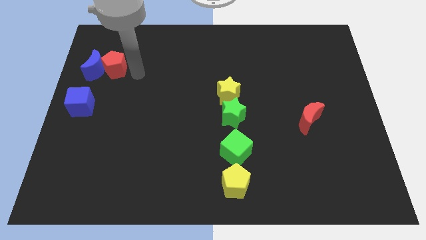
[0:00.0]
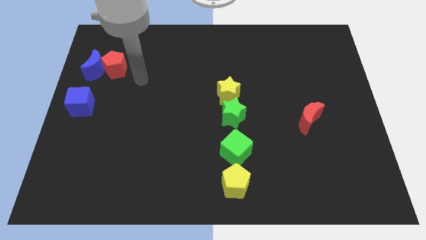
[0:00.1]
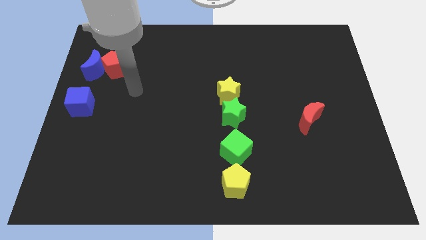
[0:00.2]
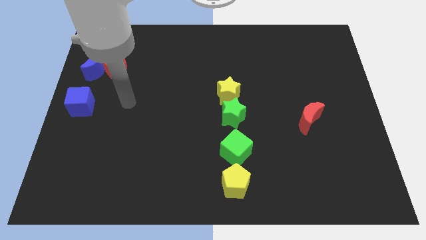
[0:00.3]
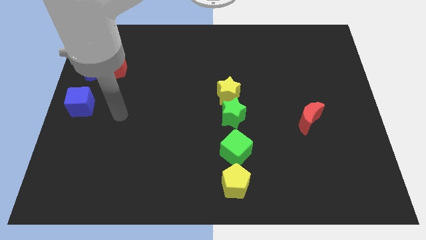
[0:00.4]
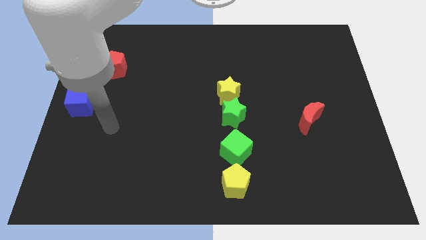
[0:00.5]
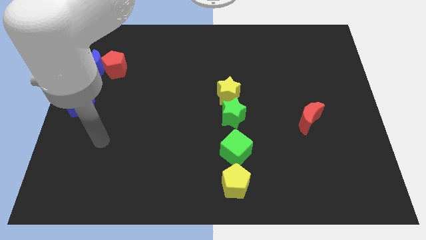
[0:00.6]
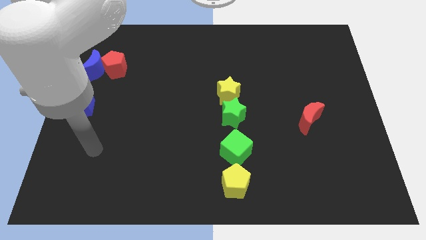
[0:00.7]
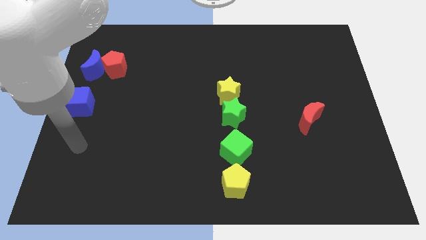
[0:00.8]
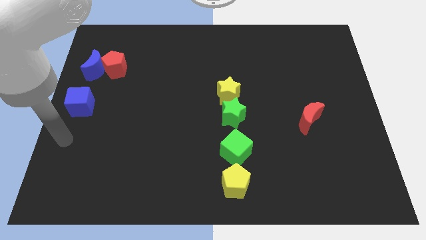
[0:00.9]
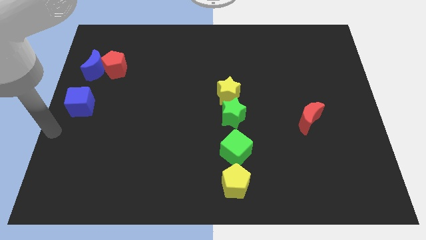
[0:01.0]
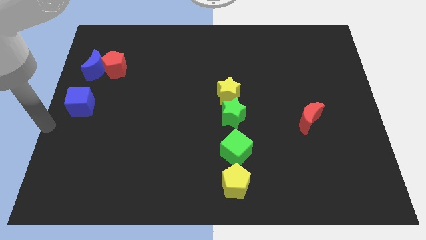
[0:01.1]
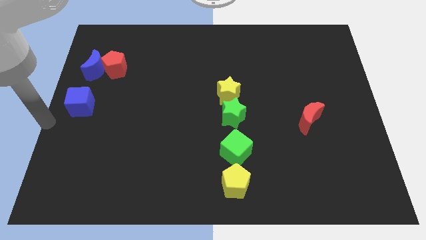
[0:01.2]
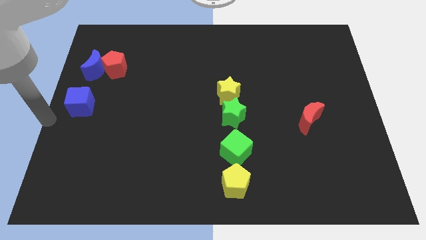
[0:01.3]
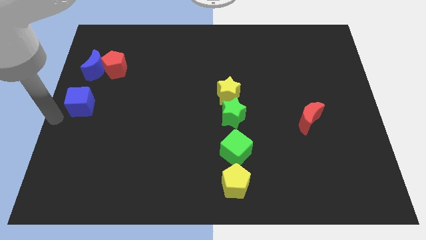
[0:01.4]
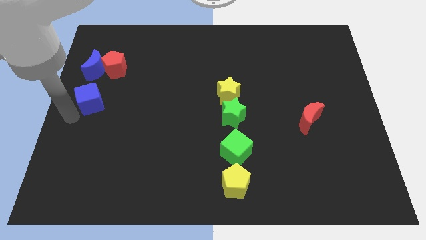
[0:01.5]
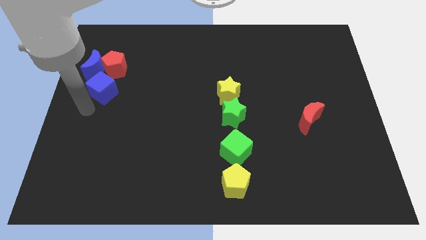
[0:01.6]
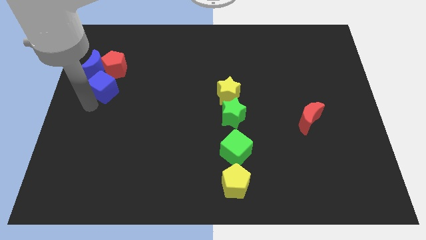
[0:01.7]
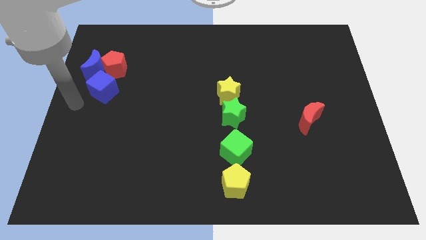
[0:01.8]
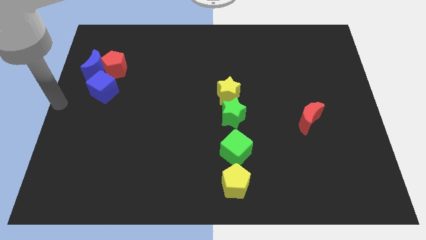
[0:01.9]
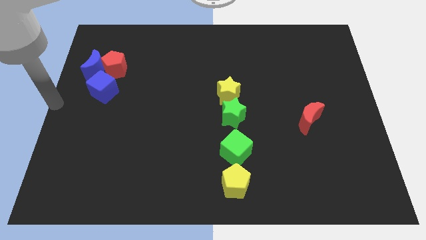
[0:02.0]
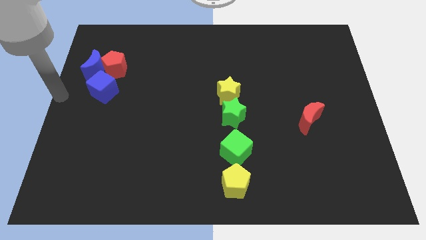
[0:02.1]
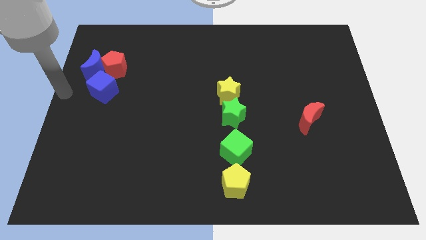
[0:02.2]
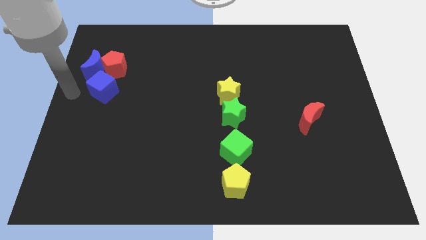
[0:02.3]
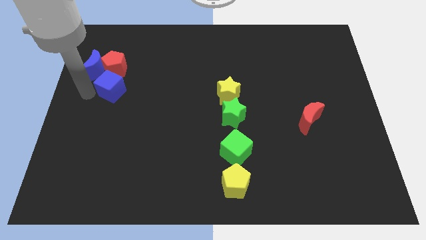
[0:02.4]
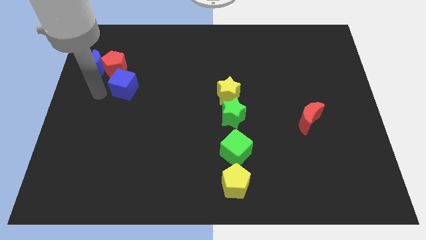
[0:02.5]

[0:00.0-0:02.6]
move the blue cube to the bottom of the red pentagon

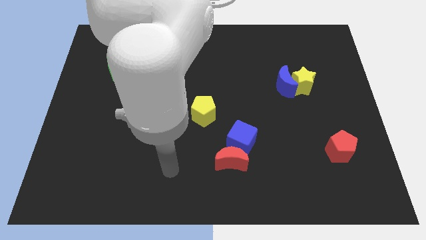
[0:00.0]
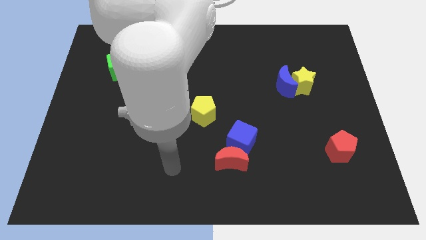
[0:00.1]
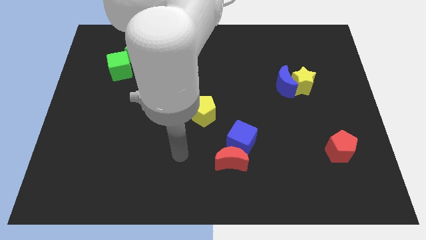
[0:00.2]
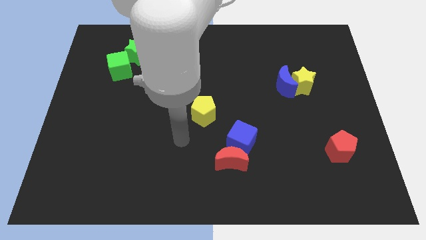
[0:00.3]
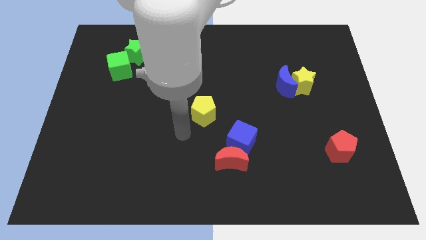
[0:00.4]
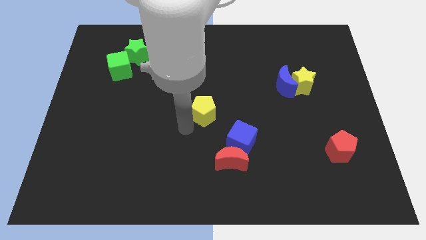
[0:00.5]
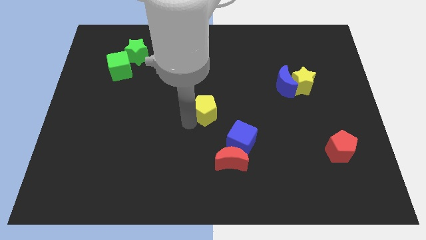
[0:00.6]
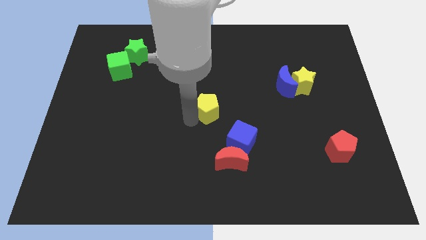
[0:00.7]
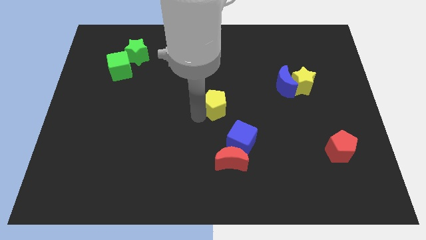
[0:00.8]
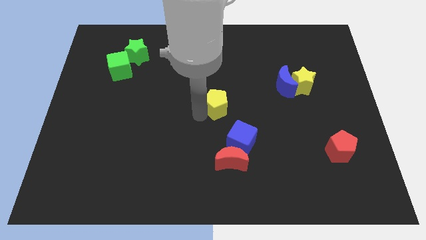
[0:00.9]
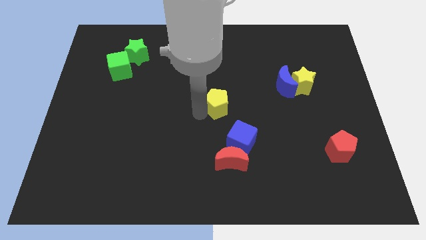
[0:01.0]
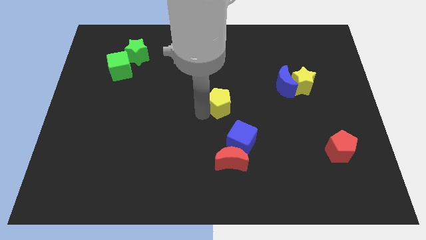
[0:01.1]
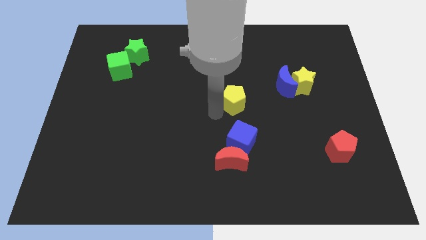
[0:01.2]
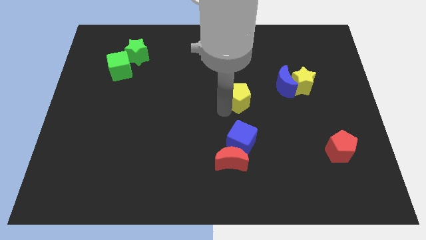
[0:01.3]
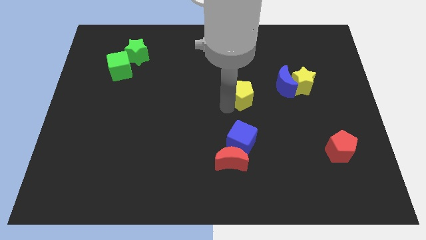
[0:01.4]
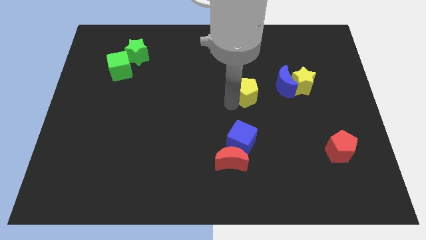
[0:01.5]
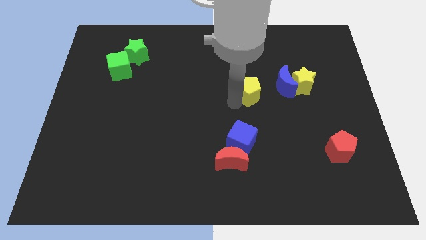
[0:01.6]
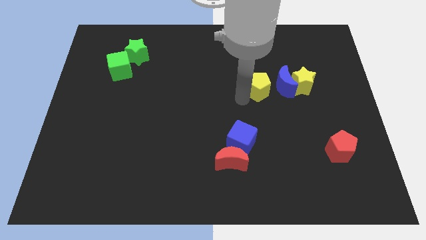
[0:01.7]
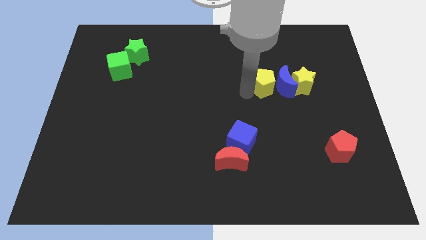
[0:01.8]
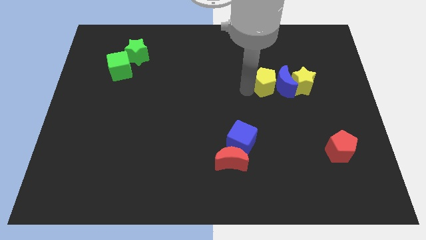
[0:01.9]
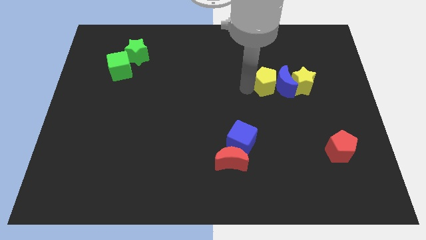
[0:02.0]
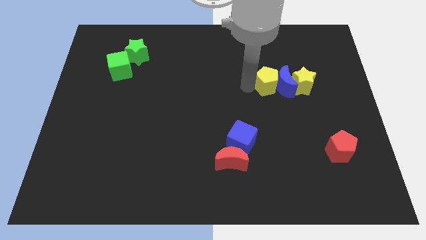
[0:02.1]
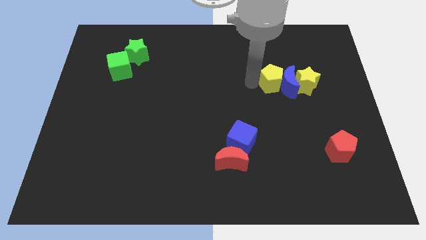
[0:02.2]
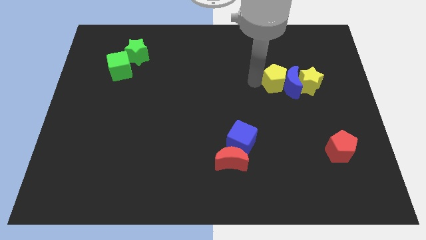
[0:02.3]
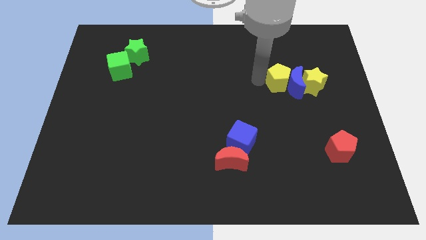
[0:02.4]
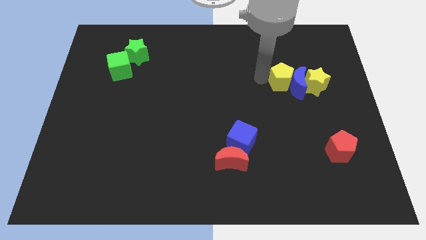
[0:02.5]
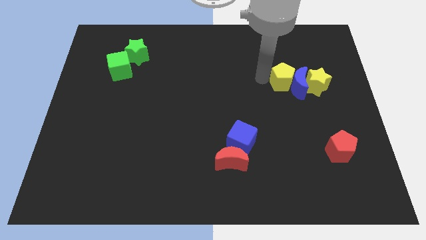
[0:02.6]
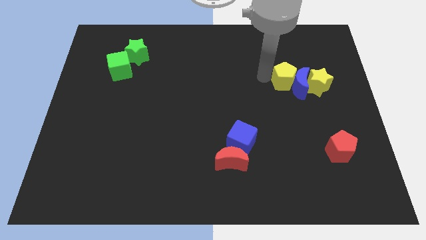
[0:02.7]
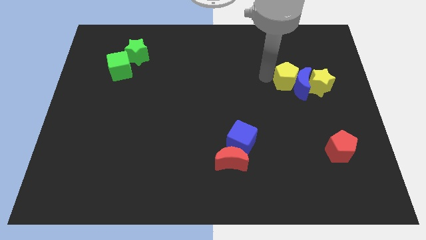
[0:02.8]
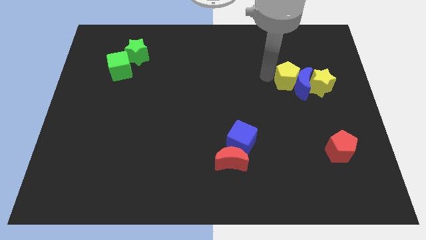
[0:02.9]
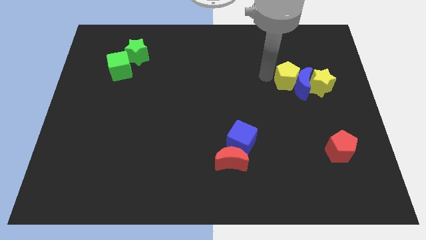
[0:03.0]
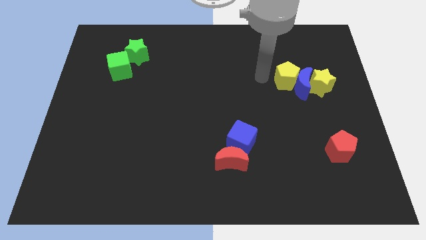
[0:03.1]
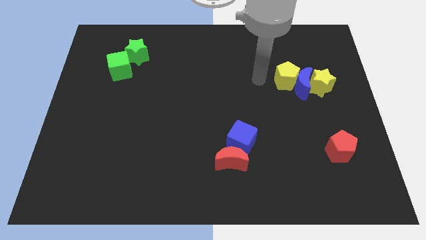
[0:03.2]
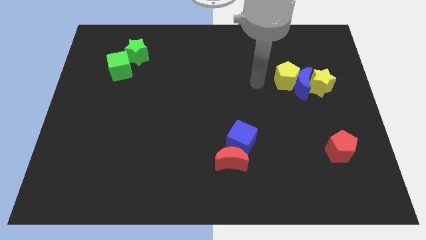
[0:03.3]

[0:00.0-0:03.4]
push the yellow pentagon into the blue crescent

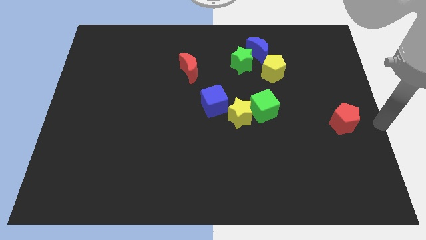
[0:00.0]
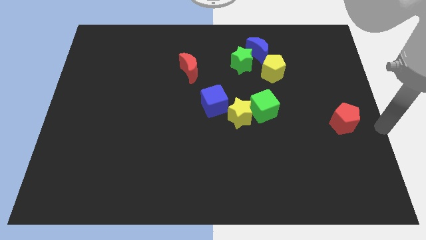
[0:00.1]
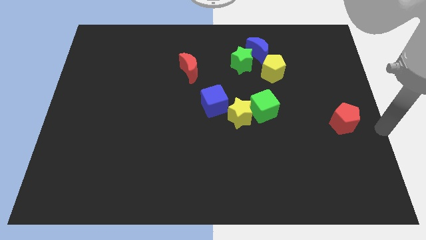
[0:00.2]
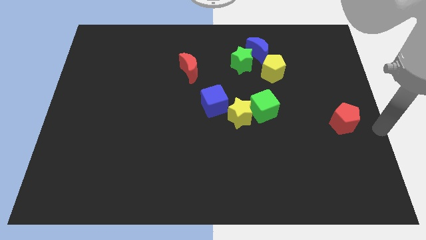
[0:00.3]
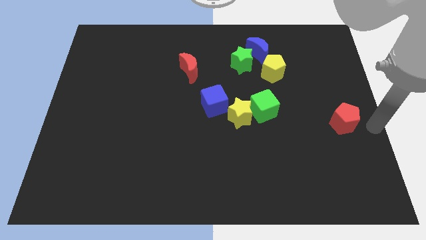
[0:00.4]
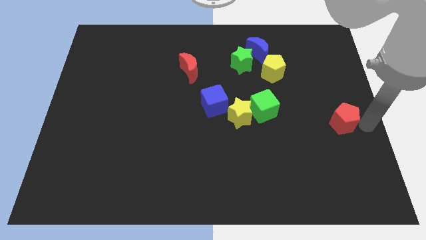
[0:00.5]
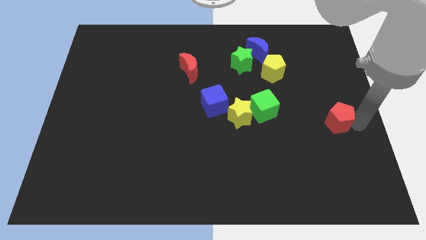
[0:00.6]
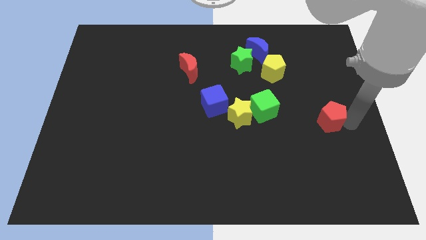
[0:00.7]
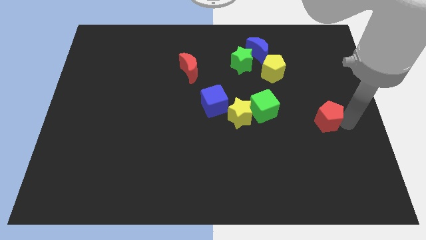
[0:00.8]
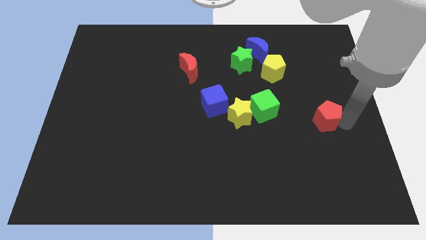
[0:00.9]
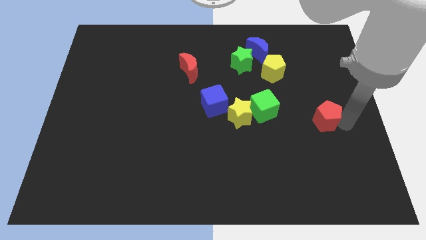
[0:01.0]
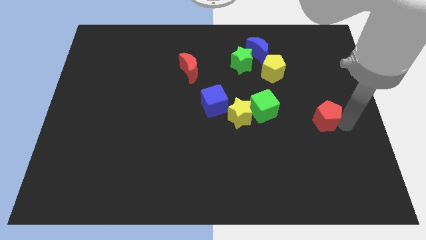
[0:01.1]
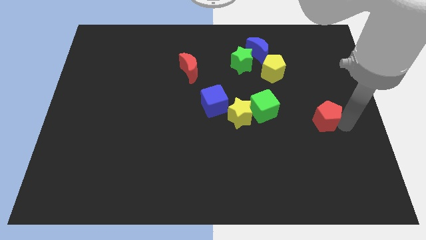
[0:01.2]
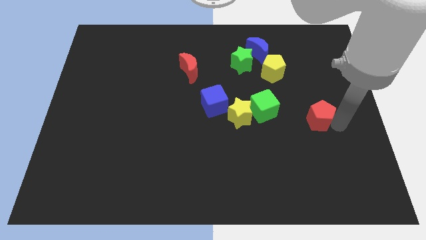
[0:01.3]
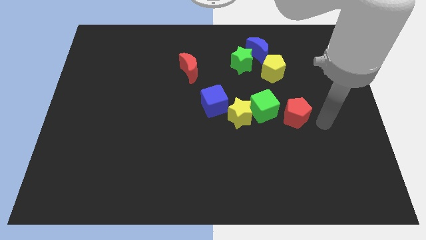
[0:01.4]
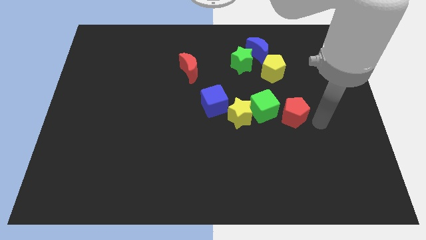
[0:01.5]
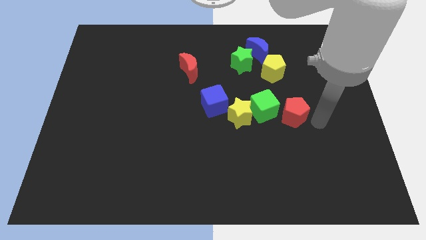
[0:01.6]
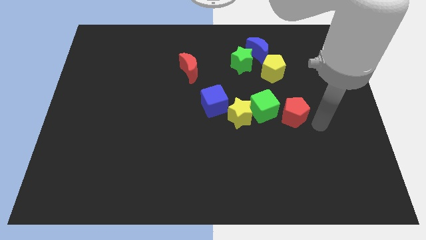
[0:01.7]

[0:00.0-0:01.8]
push the red pentagon to the right of the green cube

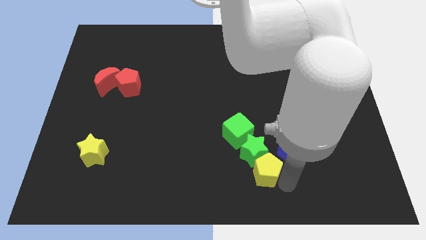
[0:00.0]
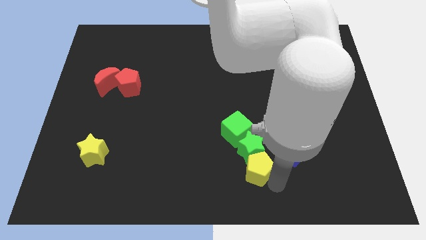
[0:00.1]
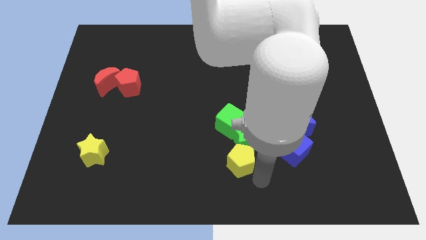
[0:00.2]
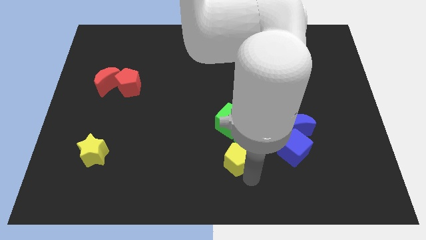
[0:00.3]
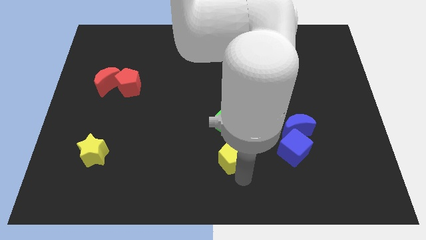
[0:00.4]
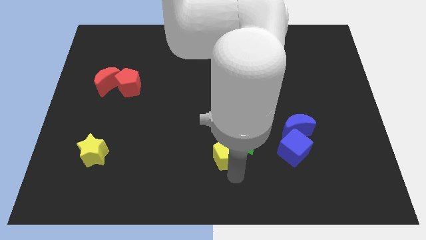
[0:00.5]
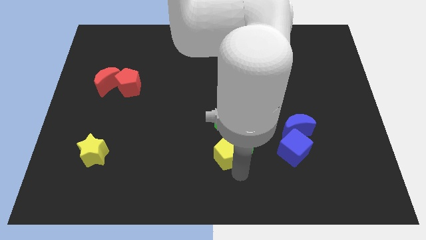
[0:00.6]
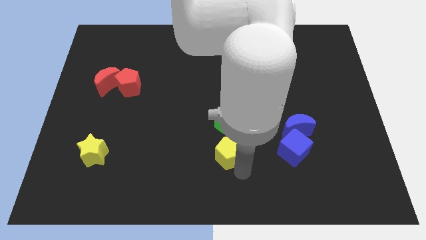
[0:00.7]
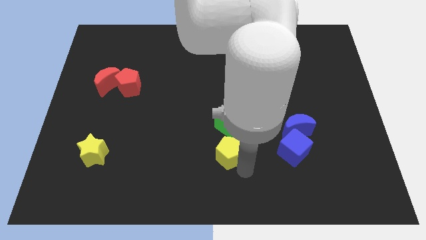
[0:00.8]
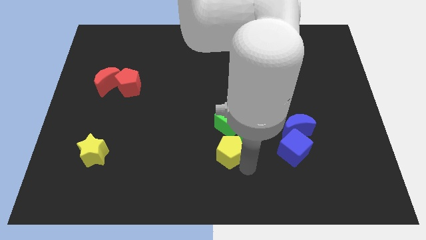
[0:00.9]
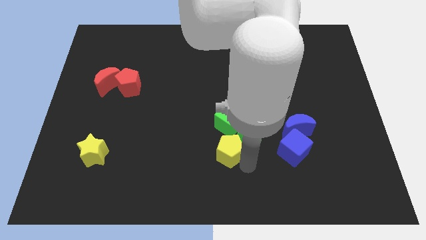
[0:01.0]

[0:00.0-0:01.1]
push the yellow pentagon to the bottom of the green cube
